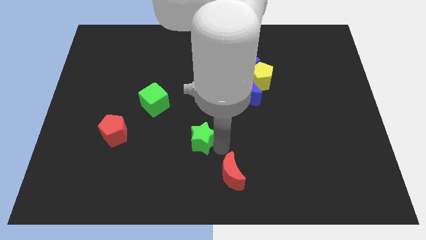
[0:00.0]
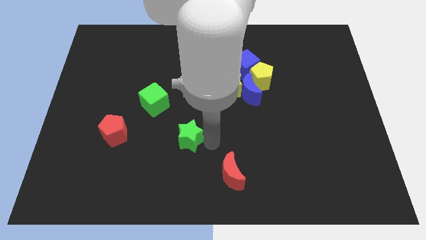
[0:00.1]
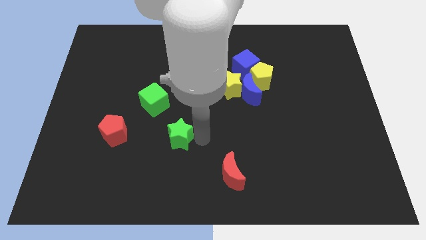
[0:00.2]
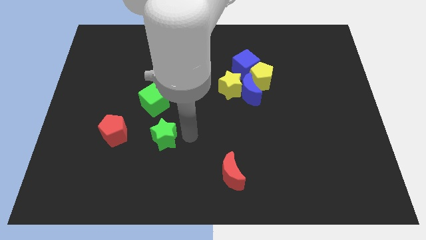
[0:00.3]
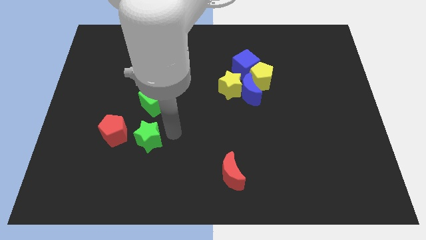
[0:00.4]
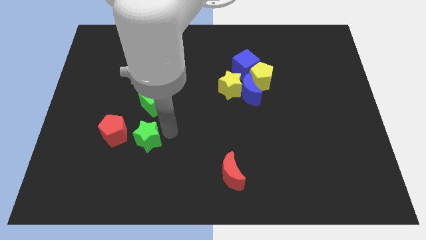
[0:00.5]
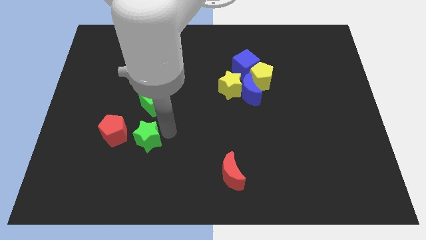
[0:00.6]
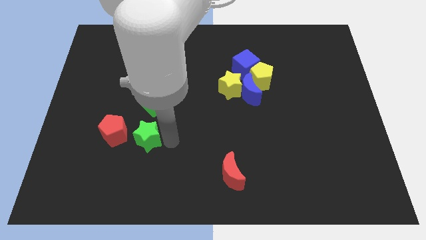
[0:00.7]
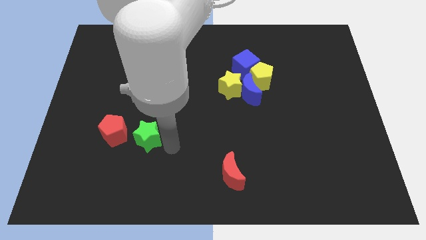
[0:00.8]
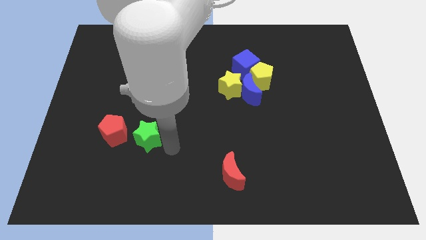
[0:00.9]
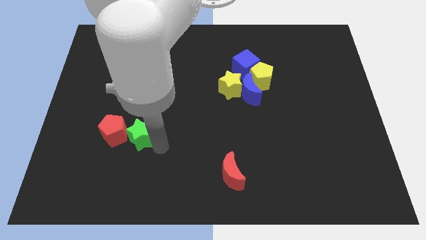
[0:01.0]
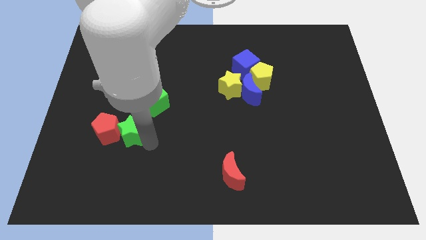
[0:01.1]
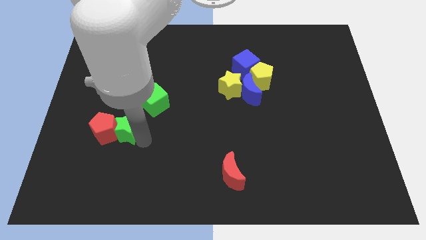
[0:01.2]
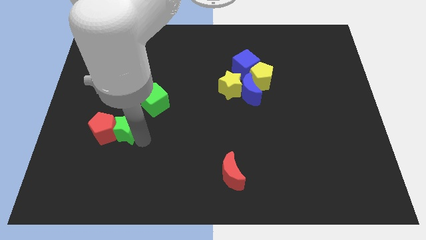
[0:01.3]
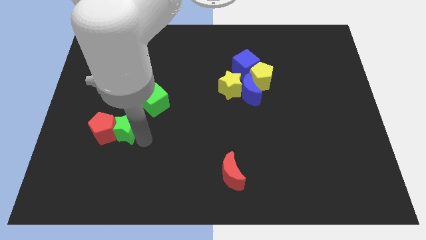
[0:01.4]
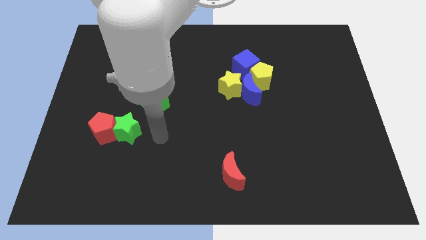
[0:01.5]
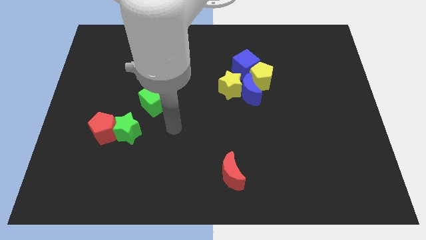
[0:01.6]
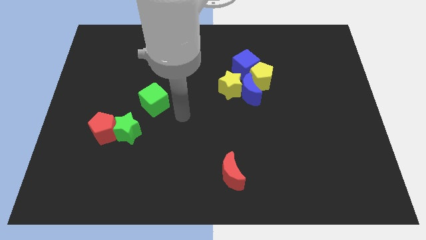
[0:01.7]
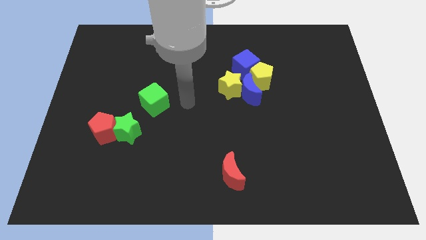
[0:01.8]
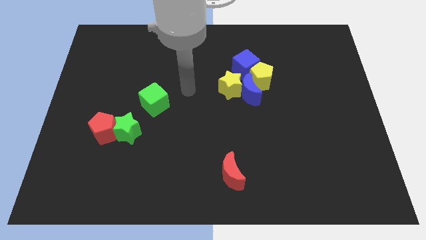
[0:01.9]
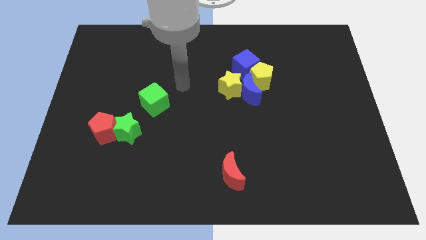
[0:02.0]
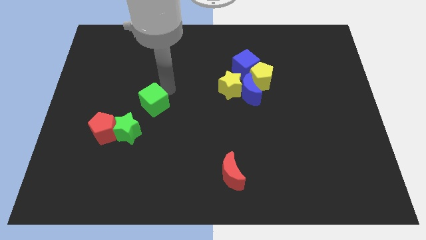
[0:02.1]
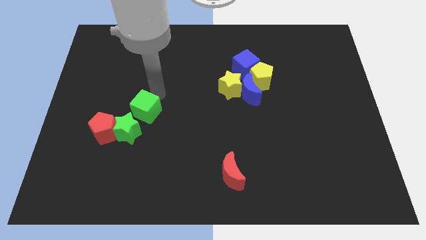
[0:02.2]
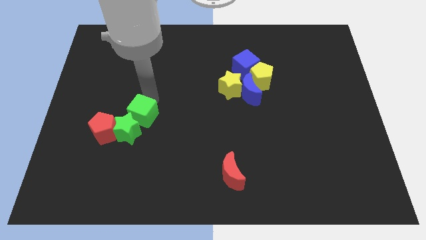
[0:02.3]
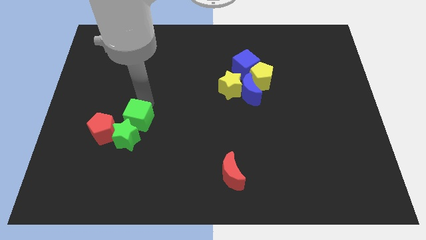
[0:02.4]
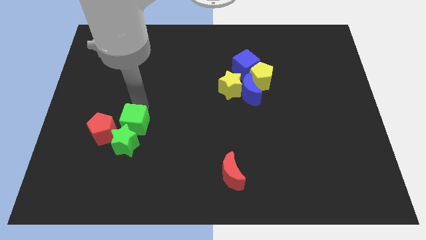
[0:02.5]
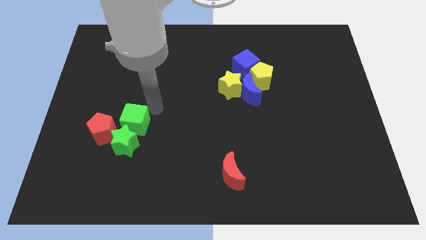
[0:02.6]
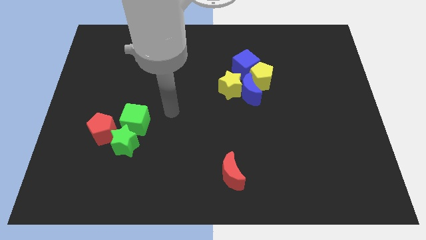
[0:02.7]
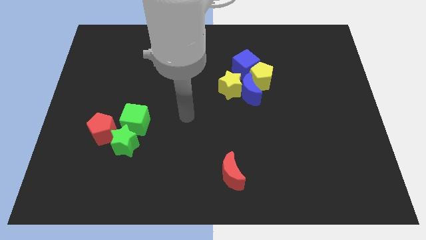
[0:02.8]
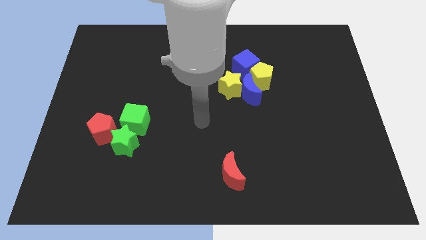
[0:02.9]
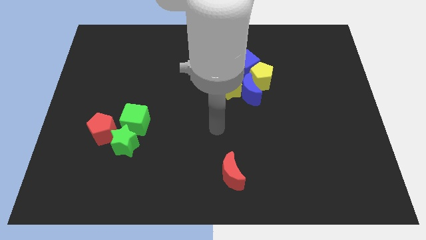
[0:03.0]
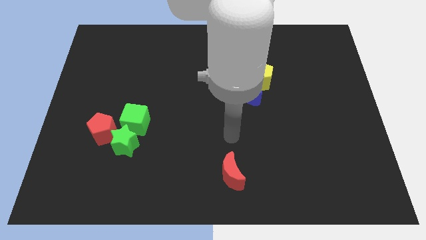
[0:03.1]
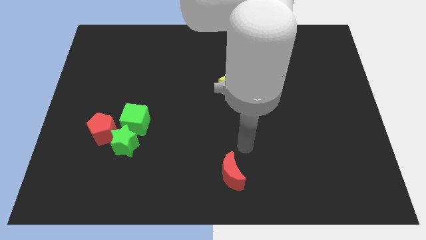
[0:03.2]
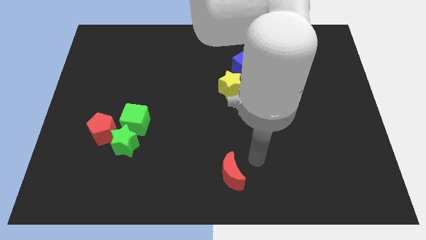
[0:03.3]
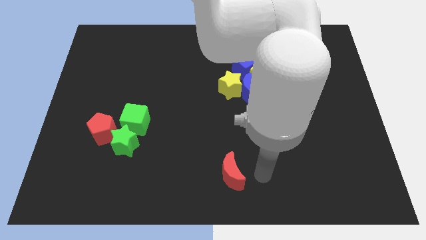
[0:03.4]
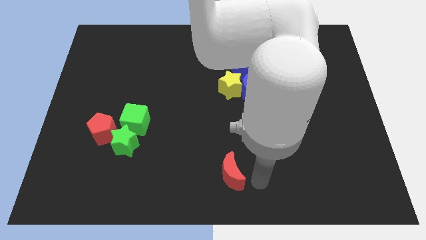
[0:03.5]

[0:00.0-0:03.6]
push the green star and green cube into the red pentagon

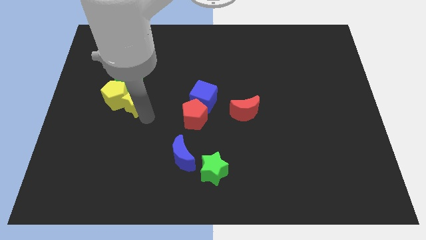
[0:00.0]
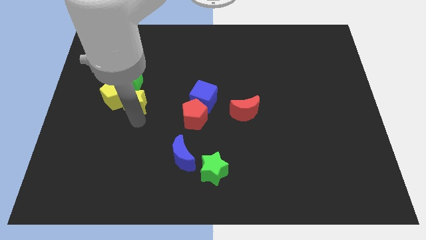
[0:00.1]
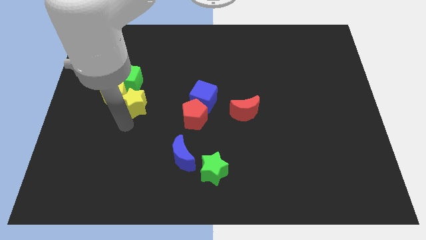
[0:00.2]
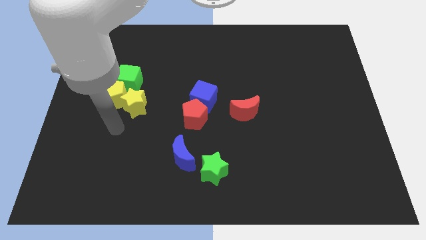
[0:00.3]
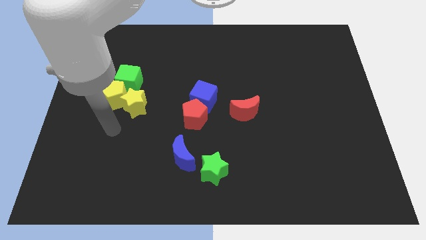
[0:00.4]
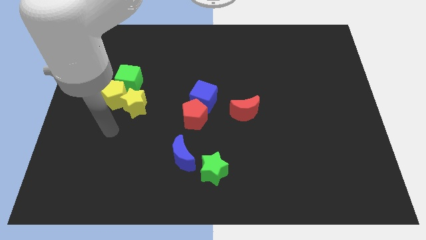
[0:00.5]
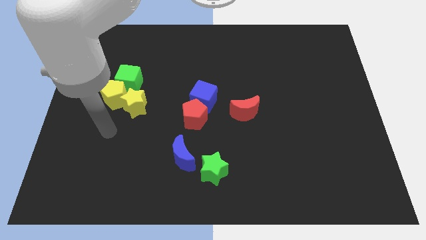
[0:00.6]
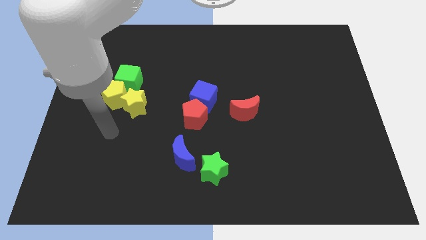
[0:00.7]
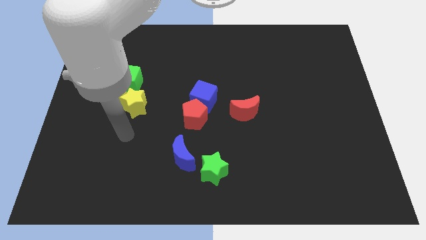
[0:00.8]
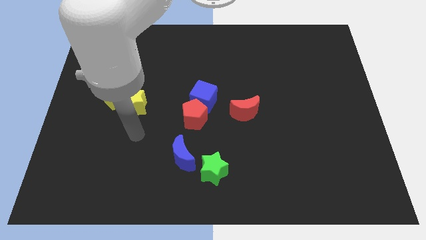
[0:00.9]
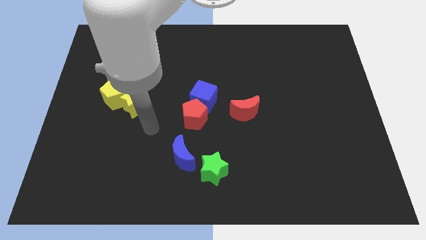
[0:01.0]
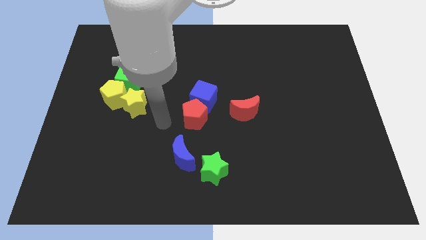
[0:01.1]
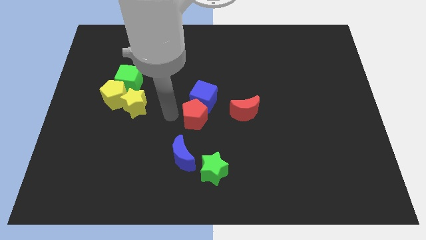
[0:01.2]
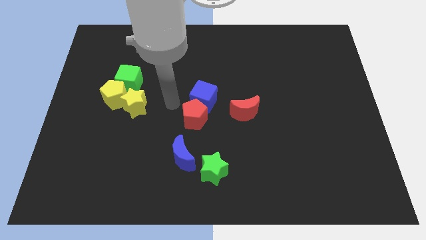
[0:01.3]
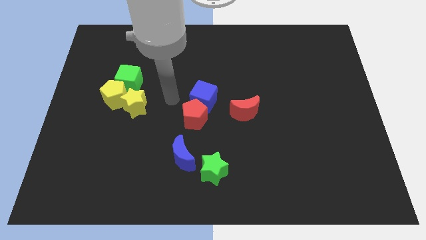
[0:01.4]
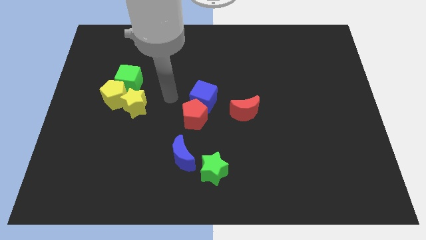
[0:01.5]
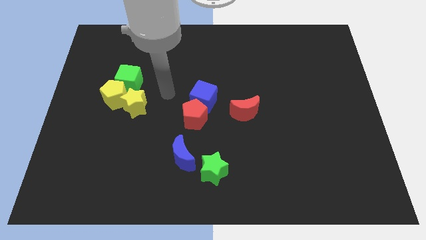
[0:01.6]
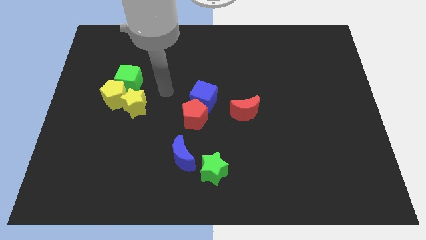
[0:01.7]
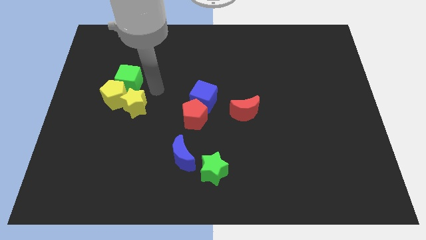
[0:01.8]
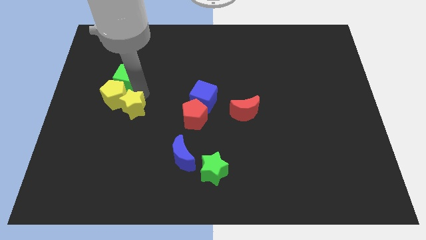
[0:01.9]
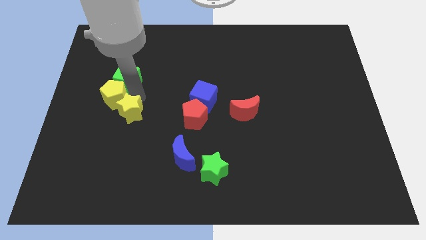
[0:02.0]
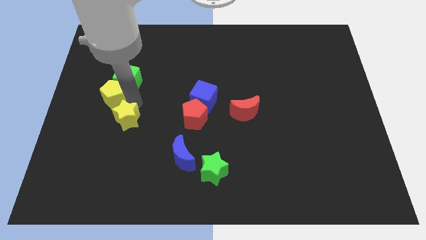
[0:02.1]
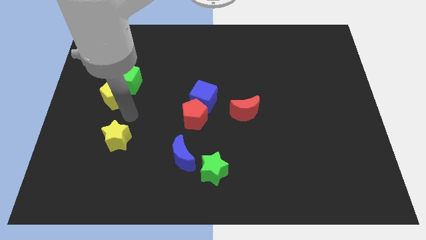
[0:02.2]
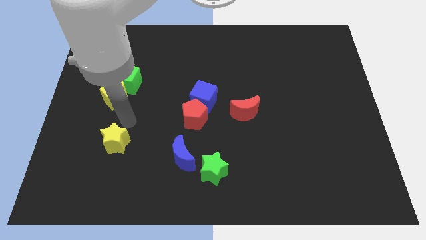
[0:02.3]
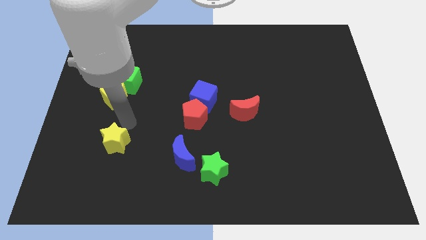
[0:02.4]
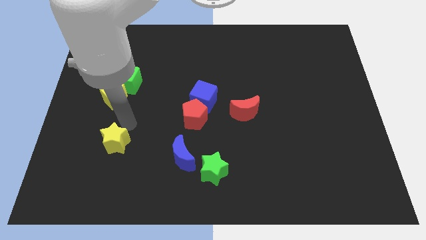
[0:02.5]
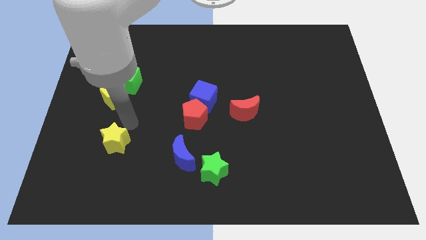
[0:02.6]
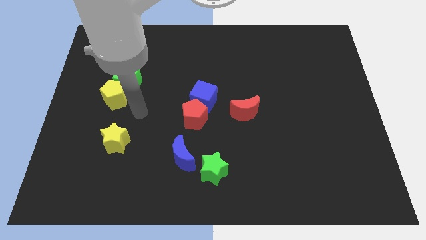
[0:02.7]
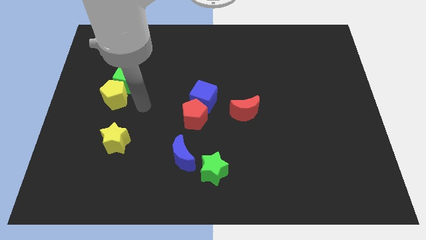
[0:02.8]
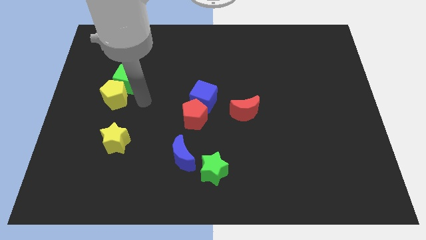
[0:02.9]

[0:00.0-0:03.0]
place the yellow star to the left of the blue moon

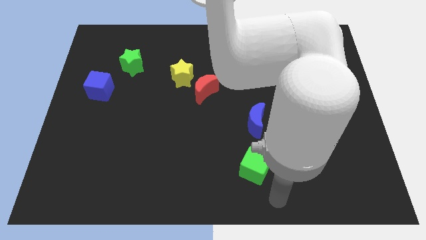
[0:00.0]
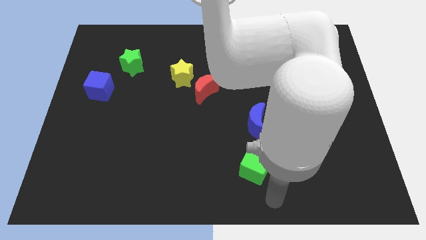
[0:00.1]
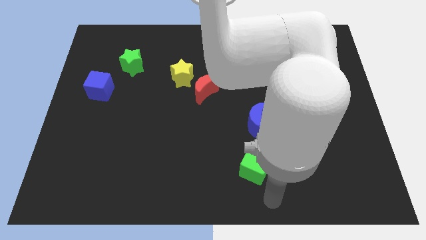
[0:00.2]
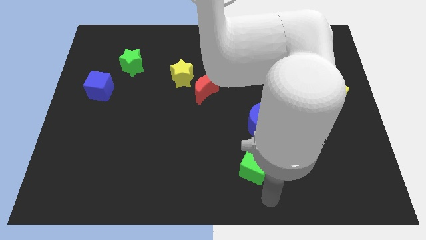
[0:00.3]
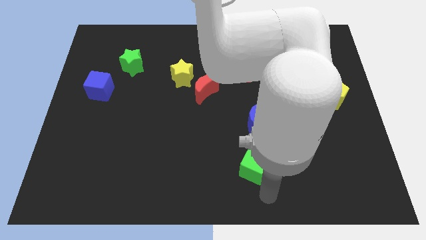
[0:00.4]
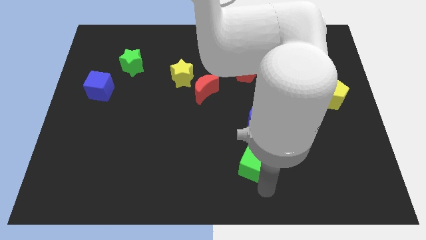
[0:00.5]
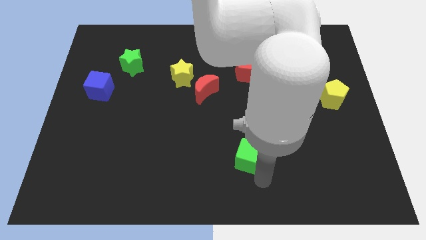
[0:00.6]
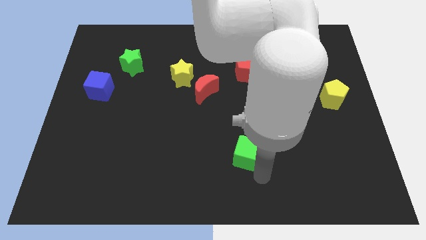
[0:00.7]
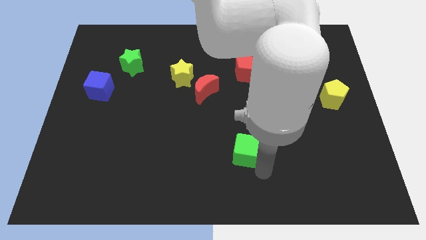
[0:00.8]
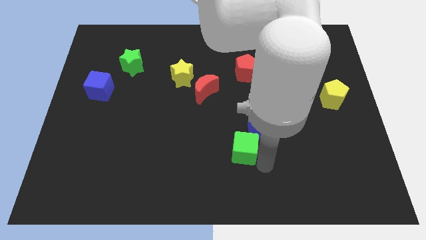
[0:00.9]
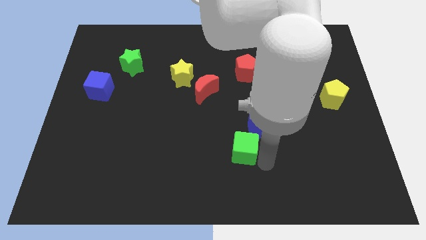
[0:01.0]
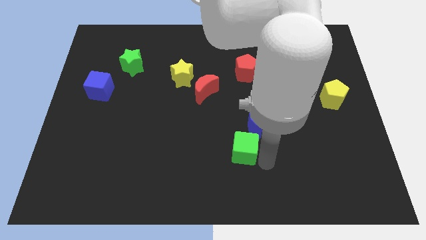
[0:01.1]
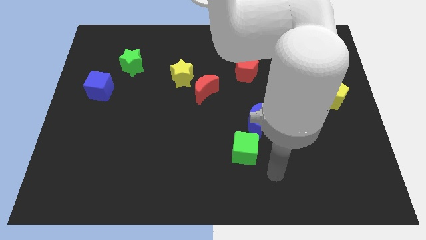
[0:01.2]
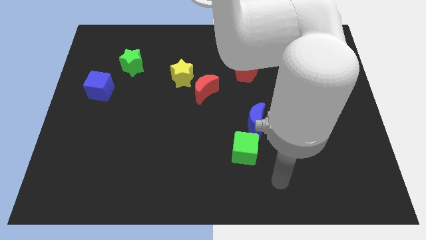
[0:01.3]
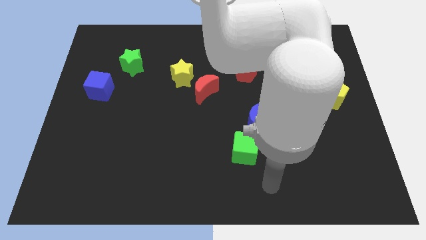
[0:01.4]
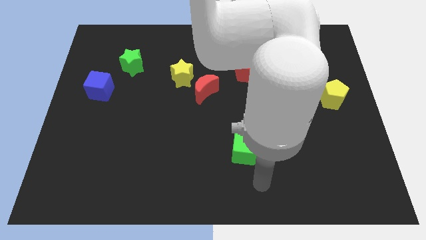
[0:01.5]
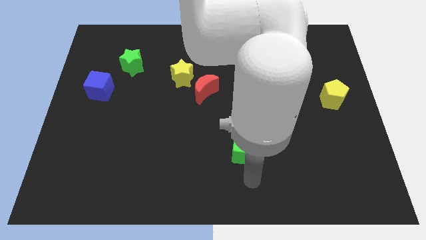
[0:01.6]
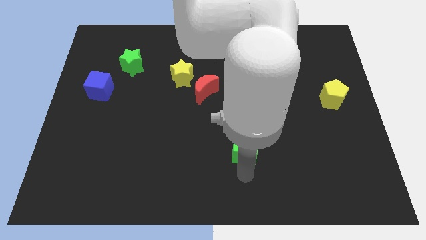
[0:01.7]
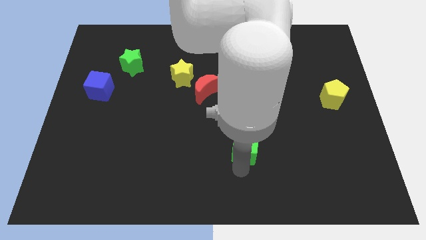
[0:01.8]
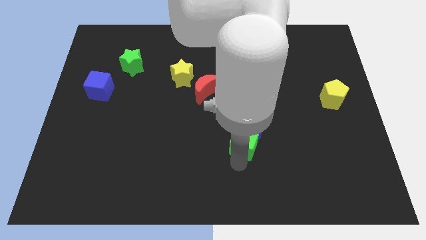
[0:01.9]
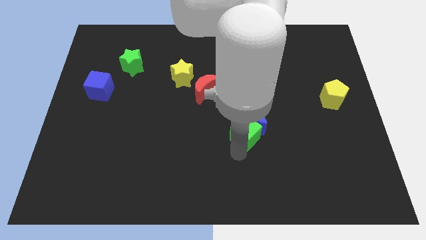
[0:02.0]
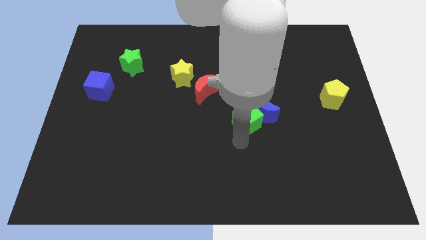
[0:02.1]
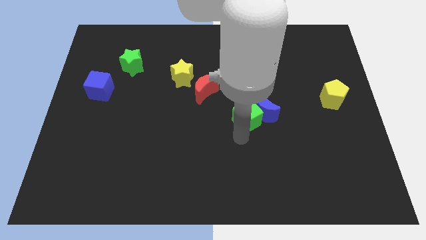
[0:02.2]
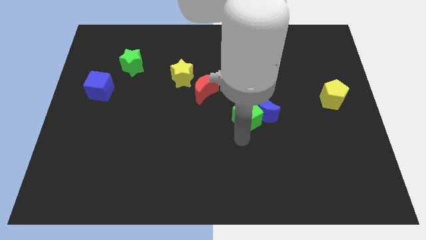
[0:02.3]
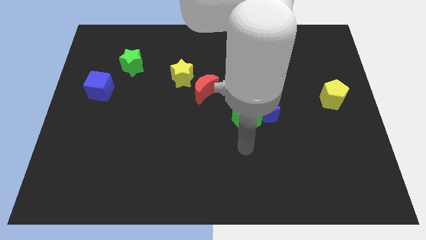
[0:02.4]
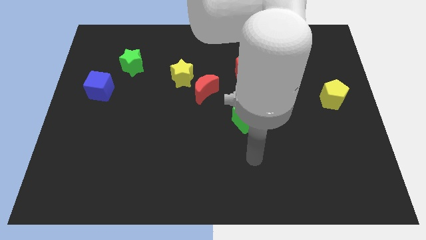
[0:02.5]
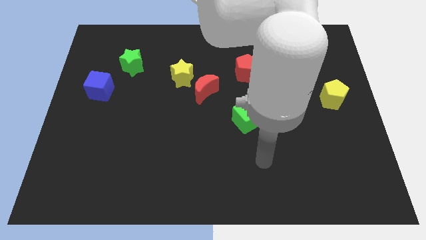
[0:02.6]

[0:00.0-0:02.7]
move the green cube into the blue moon
